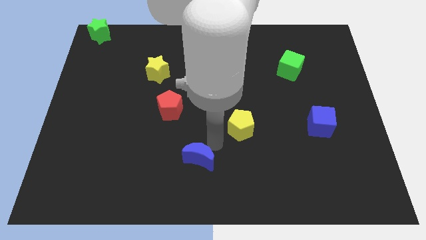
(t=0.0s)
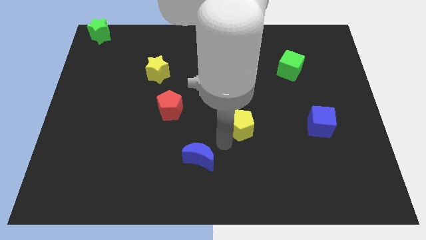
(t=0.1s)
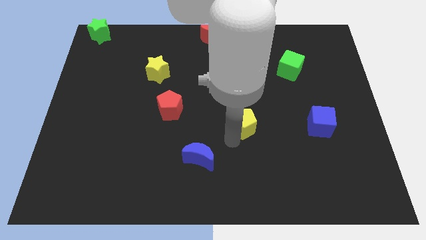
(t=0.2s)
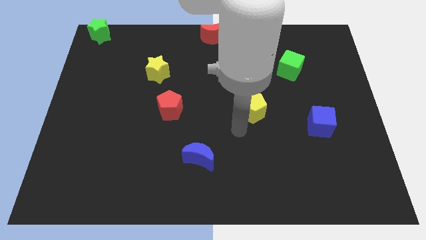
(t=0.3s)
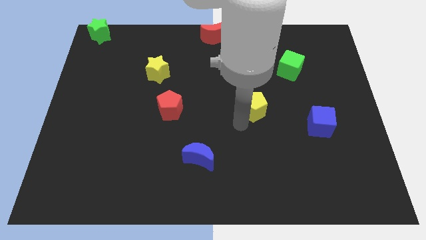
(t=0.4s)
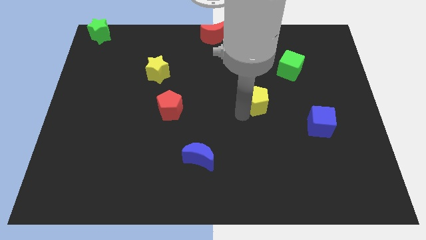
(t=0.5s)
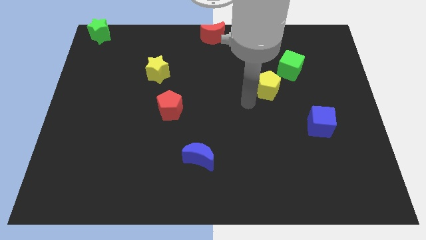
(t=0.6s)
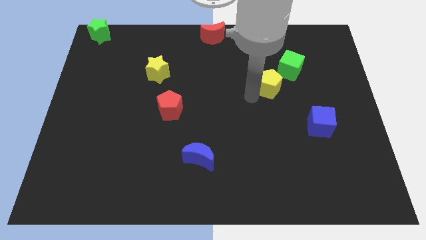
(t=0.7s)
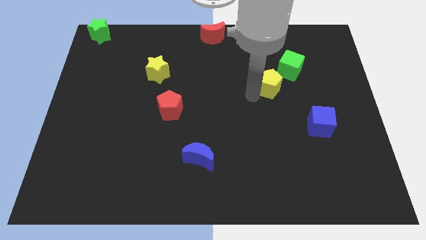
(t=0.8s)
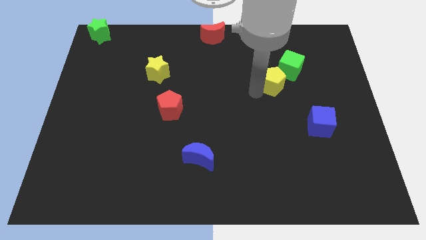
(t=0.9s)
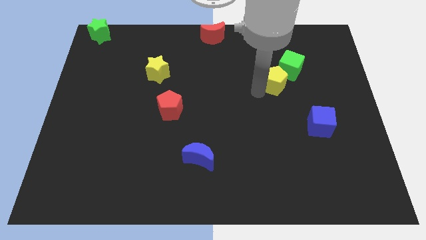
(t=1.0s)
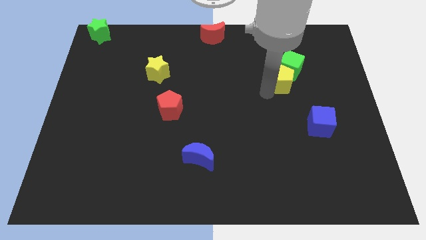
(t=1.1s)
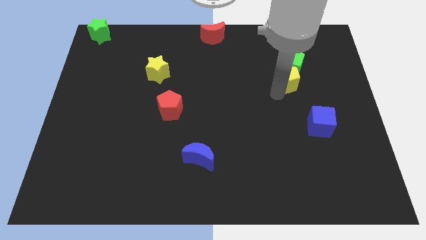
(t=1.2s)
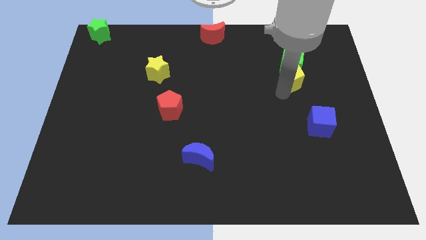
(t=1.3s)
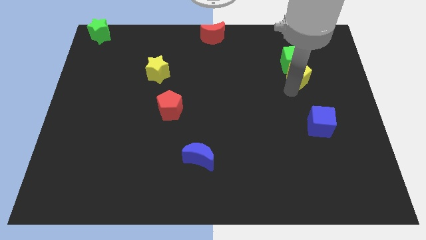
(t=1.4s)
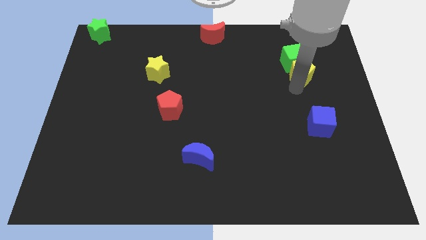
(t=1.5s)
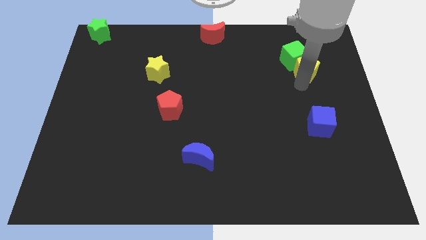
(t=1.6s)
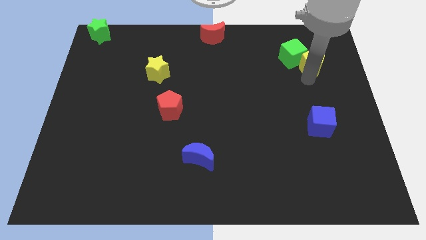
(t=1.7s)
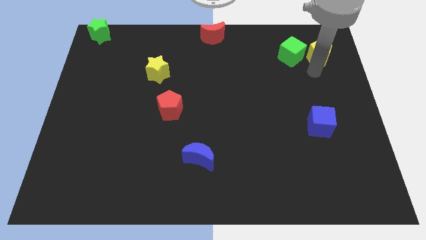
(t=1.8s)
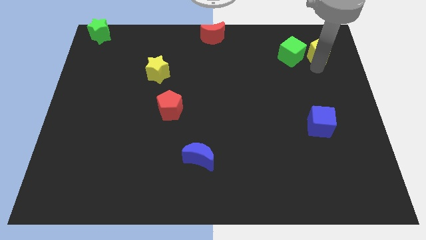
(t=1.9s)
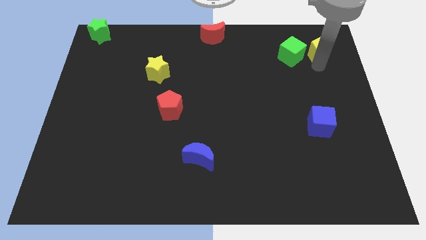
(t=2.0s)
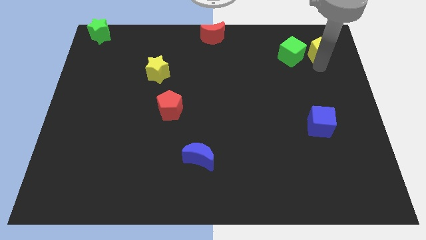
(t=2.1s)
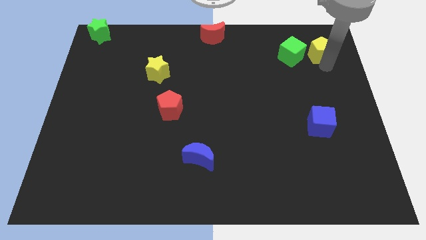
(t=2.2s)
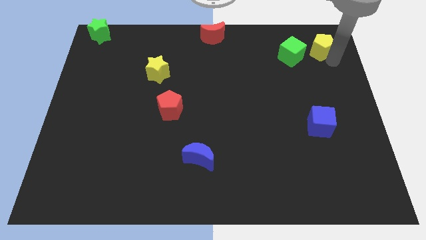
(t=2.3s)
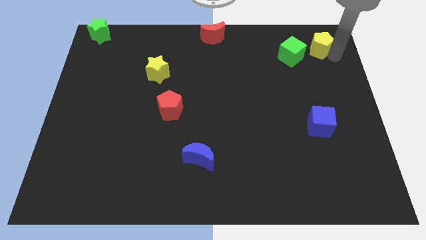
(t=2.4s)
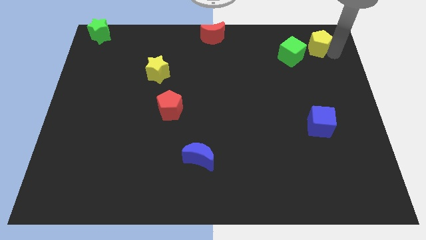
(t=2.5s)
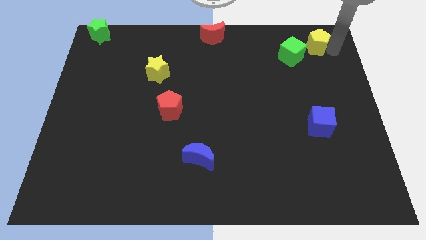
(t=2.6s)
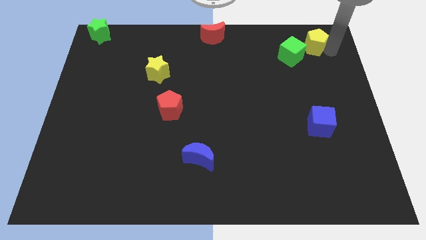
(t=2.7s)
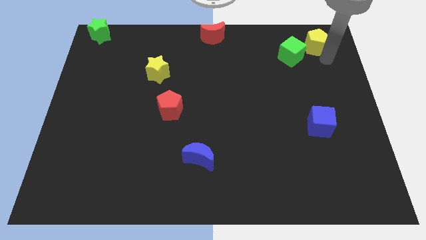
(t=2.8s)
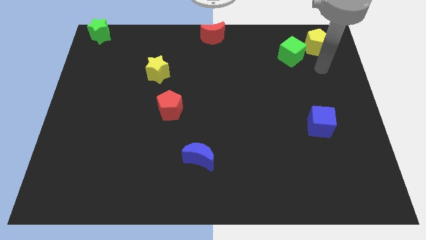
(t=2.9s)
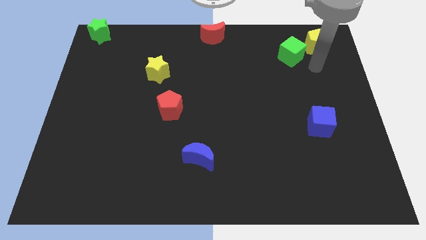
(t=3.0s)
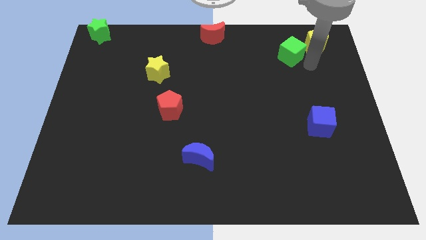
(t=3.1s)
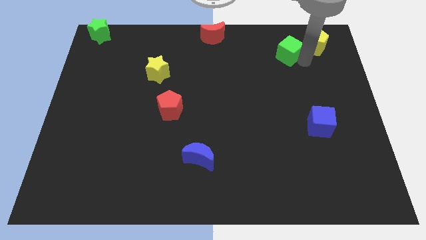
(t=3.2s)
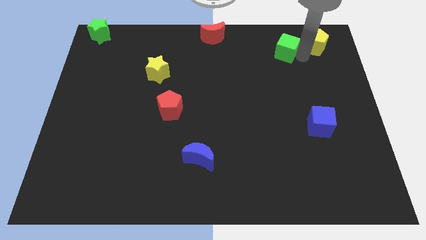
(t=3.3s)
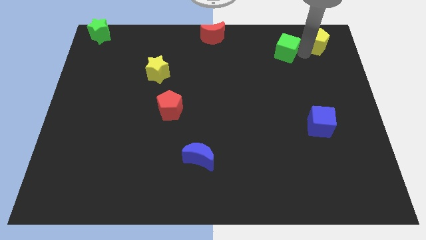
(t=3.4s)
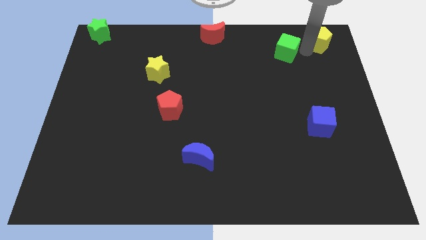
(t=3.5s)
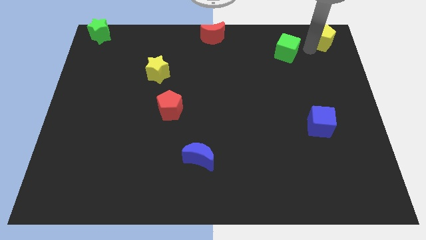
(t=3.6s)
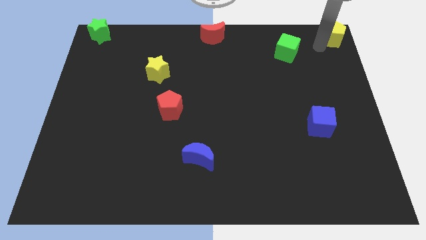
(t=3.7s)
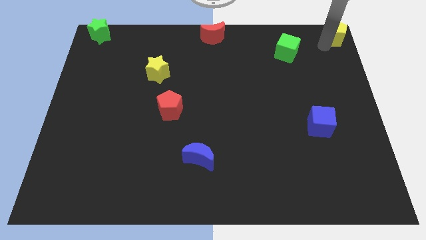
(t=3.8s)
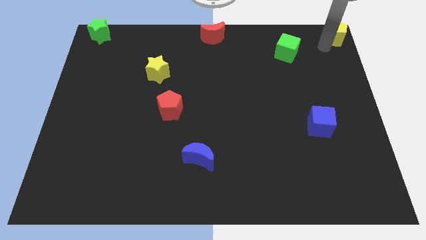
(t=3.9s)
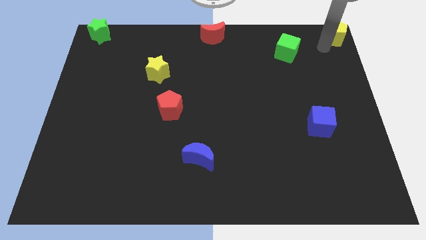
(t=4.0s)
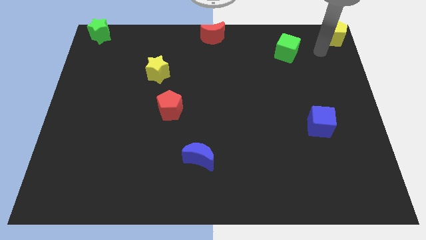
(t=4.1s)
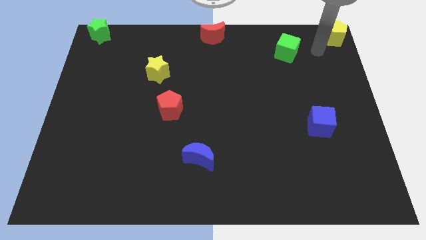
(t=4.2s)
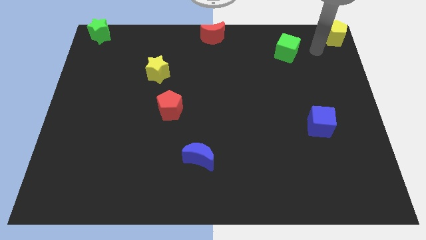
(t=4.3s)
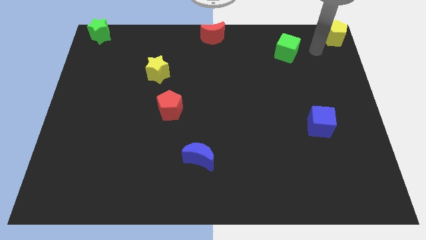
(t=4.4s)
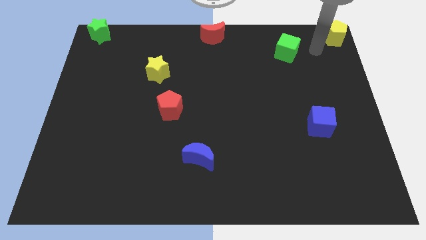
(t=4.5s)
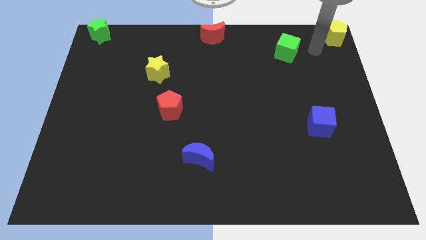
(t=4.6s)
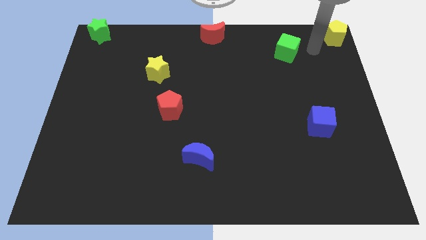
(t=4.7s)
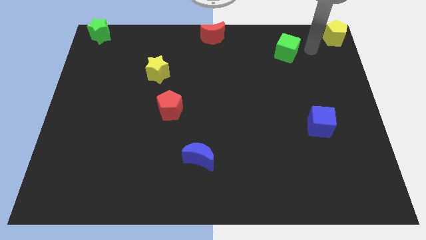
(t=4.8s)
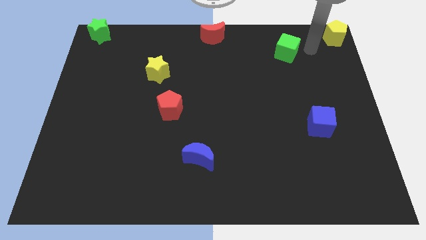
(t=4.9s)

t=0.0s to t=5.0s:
place the yellow pentagon at the top right corner of the board

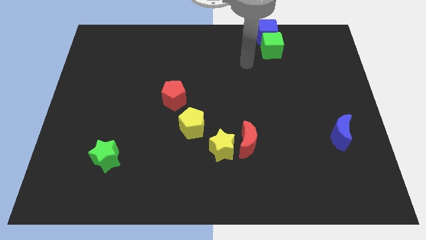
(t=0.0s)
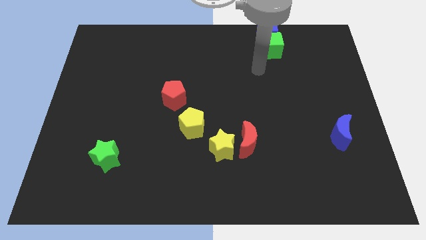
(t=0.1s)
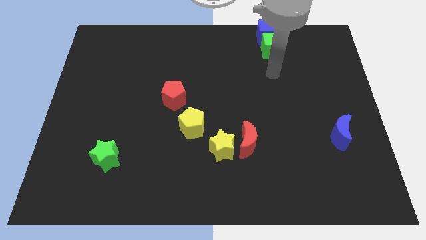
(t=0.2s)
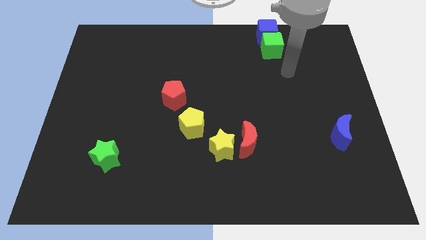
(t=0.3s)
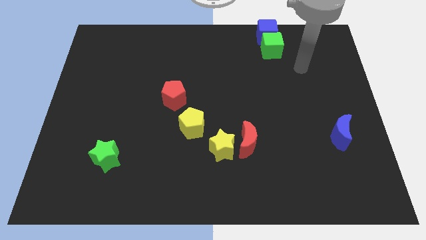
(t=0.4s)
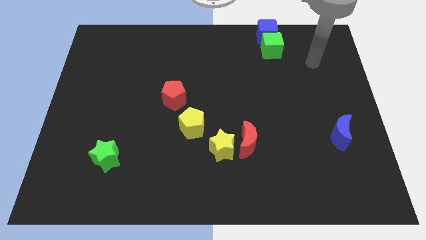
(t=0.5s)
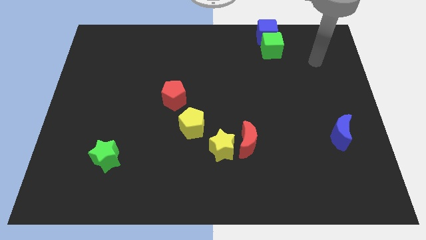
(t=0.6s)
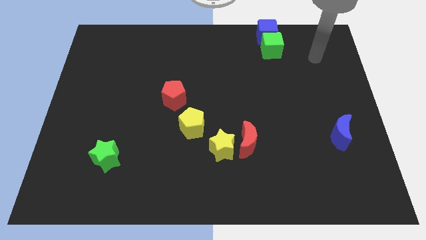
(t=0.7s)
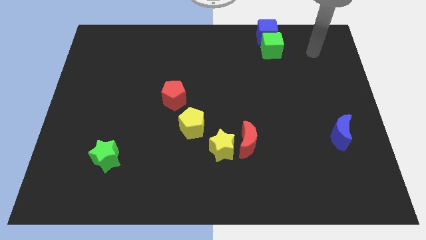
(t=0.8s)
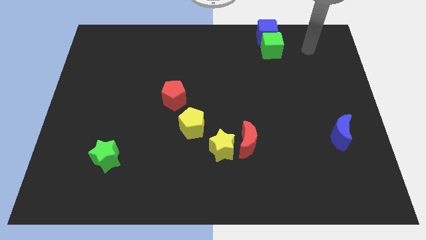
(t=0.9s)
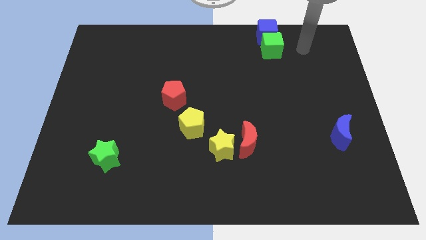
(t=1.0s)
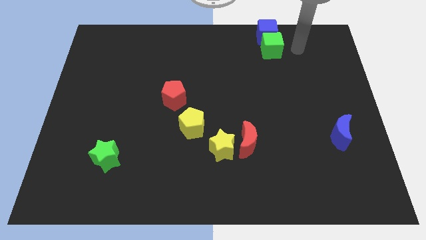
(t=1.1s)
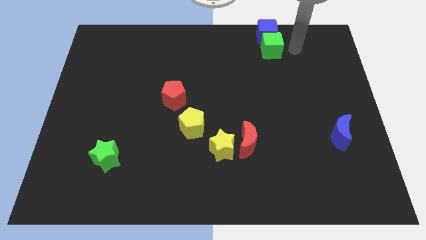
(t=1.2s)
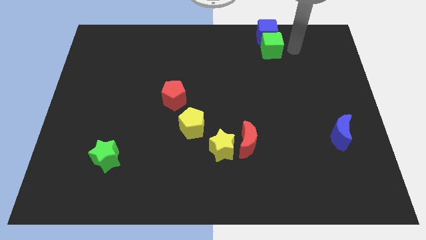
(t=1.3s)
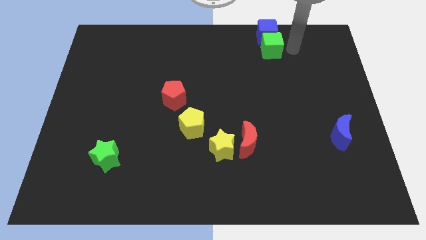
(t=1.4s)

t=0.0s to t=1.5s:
point the arm to the right of the green cube

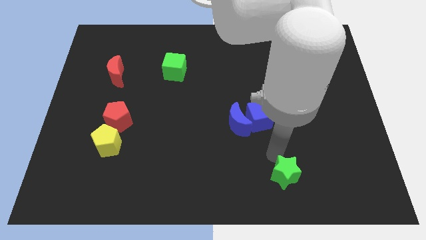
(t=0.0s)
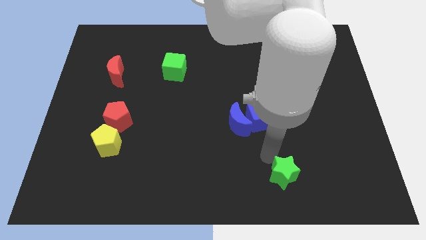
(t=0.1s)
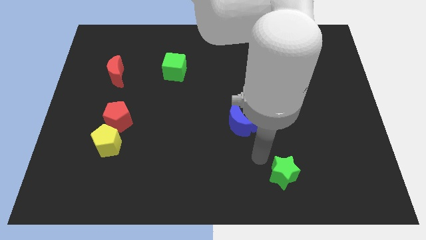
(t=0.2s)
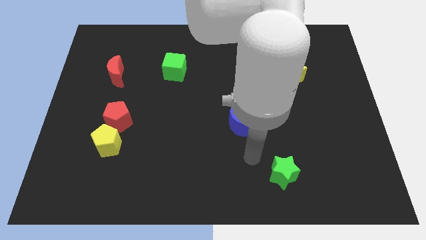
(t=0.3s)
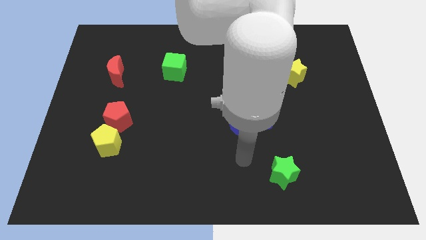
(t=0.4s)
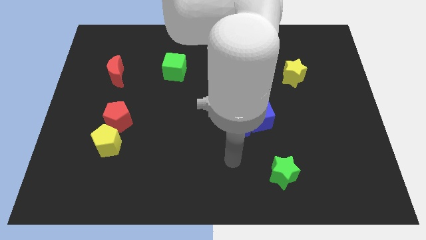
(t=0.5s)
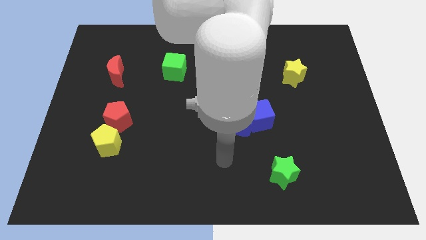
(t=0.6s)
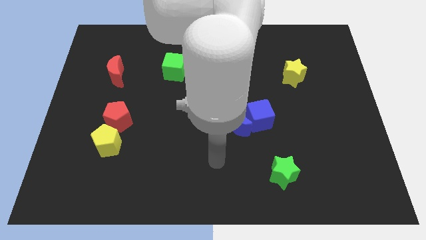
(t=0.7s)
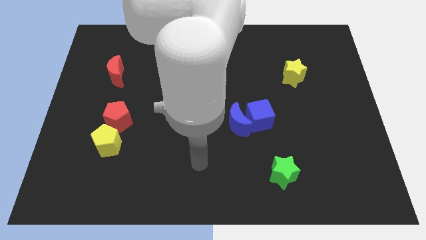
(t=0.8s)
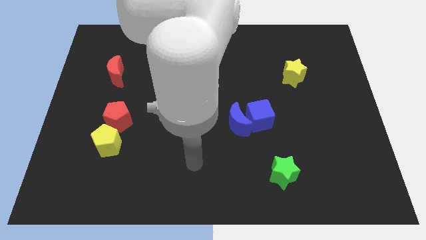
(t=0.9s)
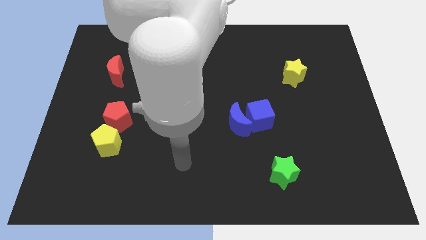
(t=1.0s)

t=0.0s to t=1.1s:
slide your arm away from green star

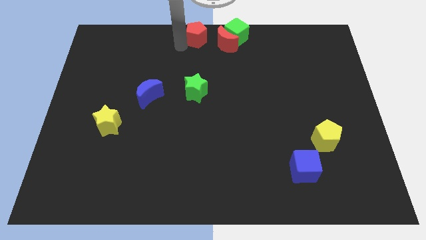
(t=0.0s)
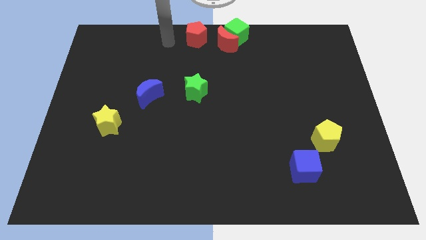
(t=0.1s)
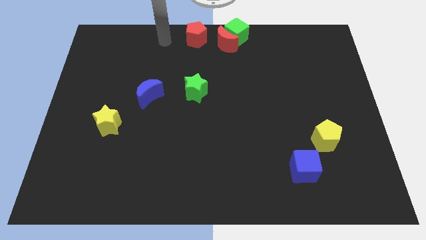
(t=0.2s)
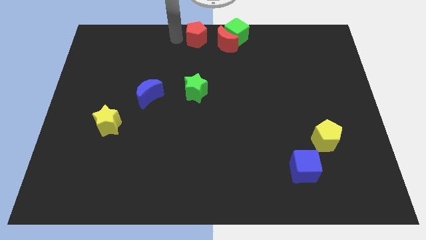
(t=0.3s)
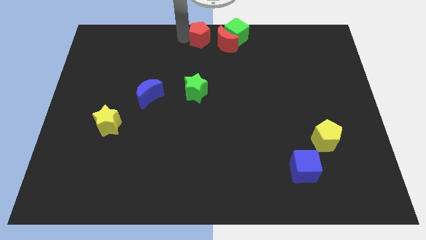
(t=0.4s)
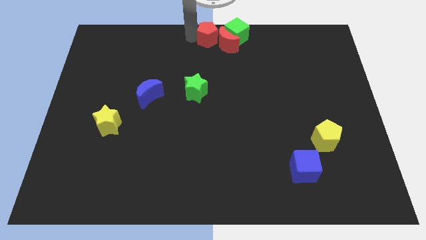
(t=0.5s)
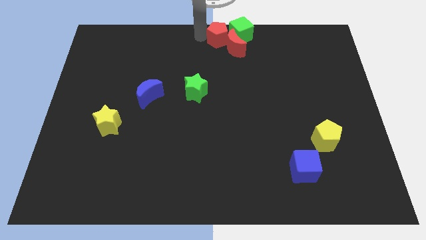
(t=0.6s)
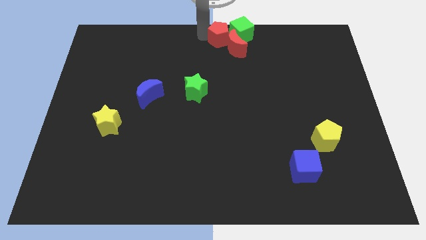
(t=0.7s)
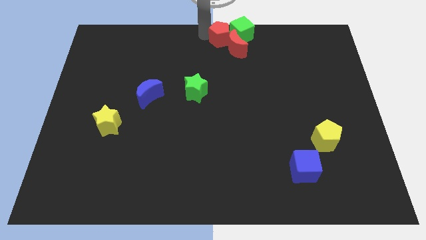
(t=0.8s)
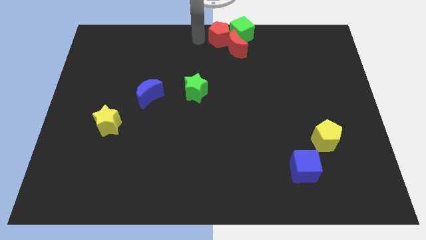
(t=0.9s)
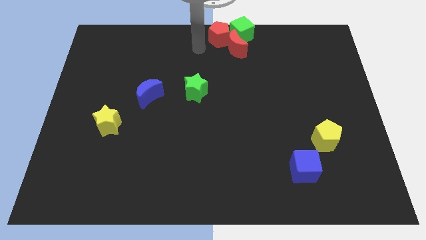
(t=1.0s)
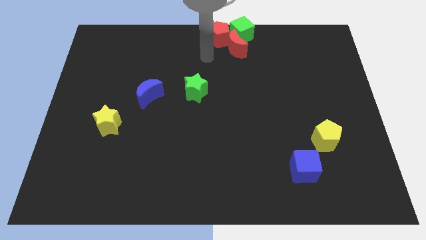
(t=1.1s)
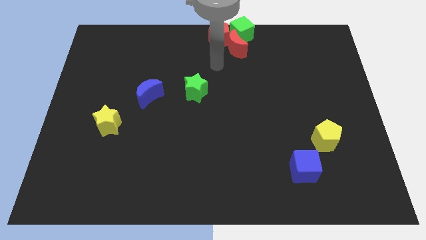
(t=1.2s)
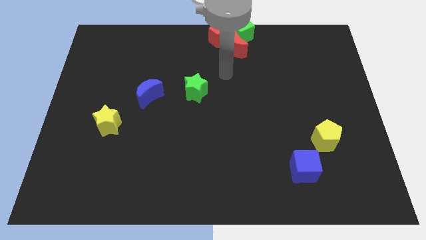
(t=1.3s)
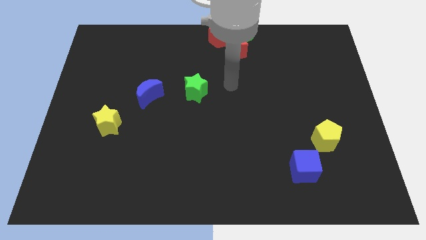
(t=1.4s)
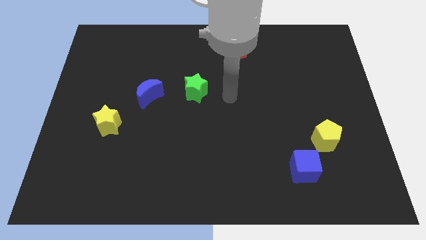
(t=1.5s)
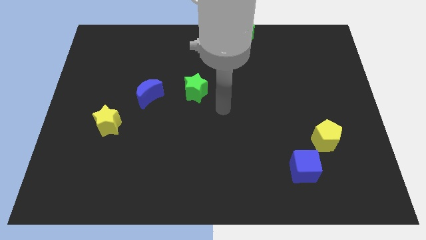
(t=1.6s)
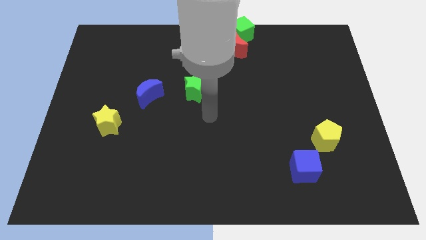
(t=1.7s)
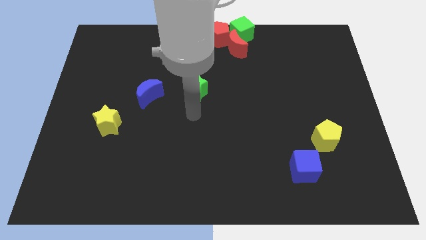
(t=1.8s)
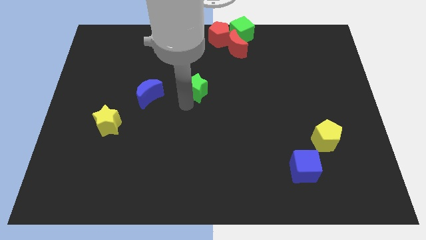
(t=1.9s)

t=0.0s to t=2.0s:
drag the red pentagon into the green cube
